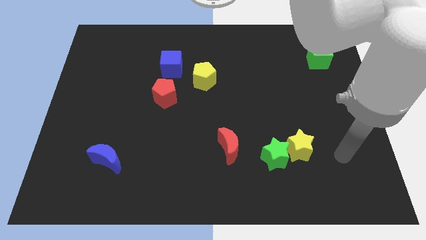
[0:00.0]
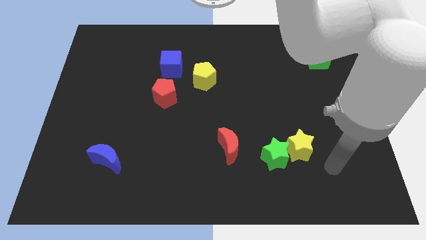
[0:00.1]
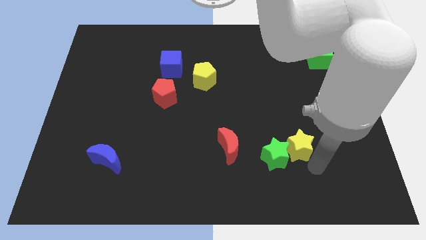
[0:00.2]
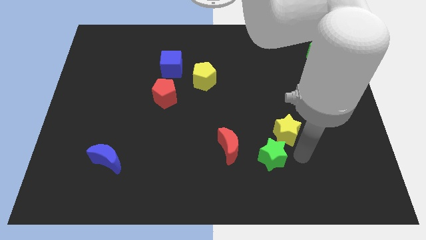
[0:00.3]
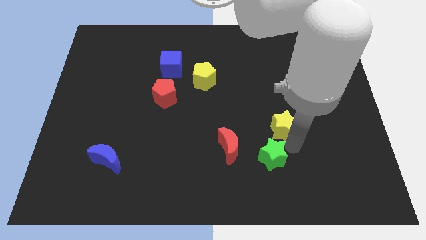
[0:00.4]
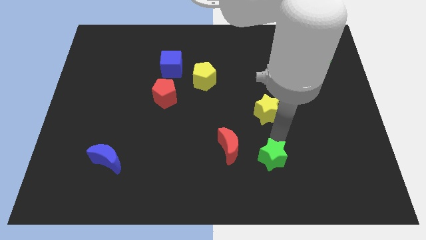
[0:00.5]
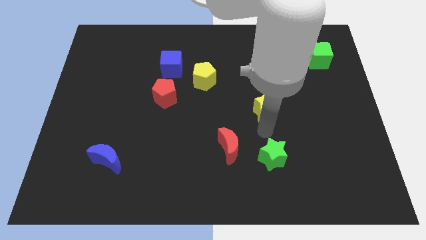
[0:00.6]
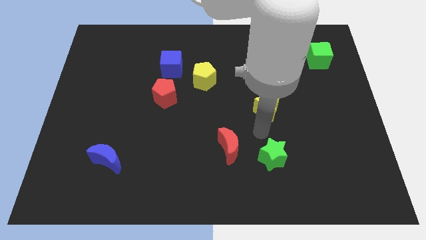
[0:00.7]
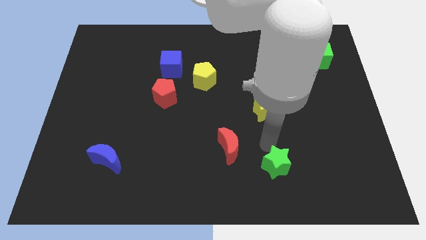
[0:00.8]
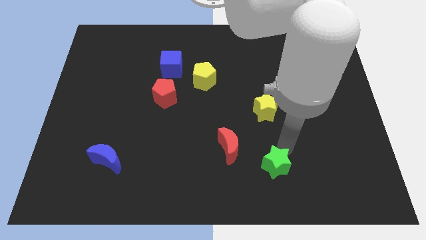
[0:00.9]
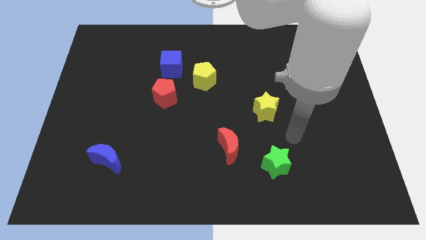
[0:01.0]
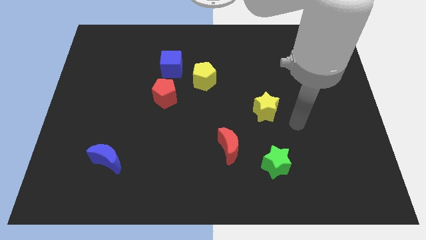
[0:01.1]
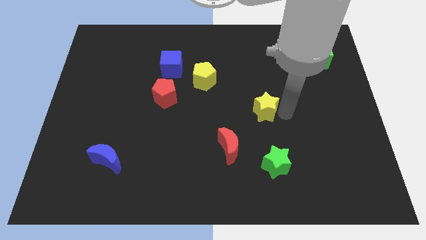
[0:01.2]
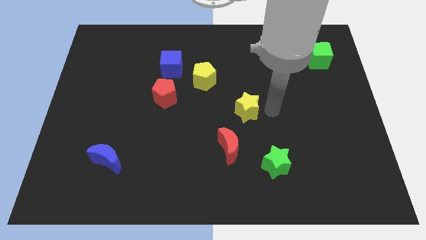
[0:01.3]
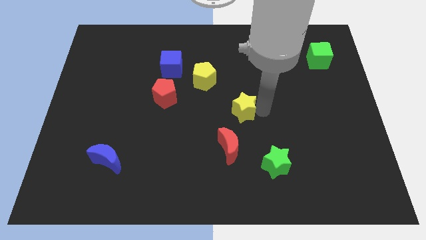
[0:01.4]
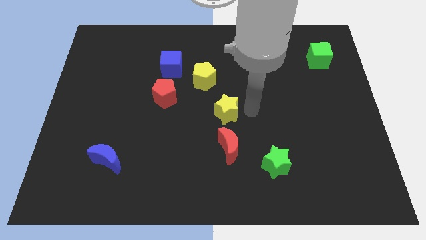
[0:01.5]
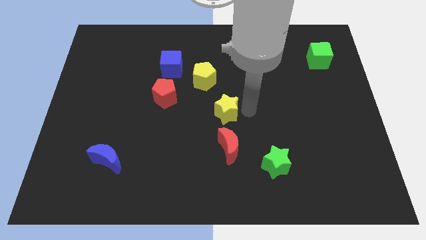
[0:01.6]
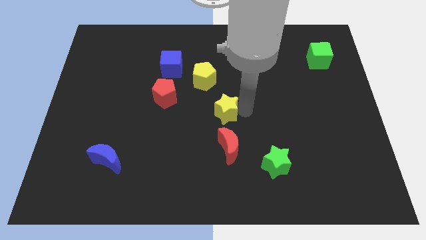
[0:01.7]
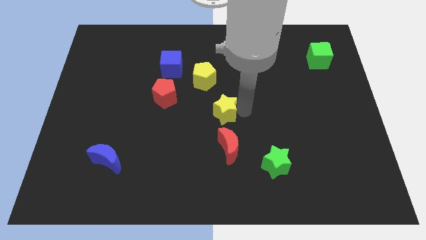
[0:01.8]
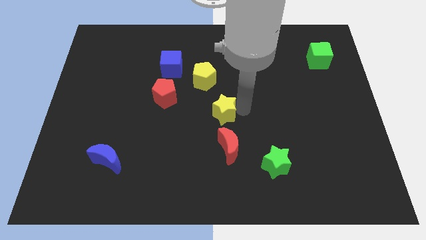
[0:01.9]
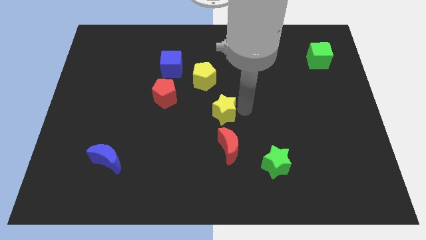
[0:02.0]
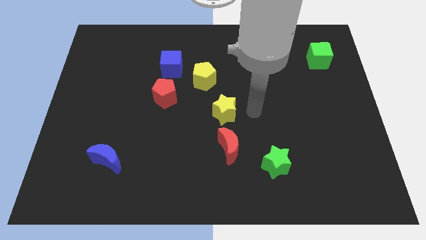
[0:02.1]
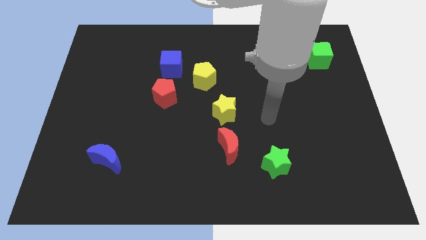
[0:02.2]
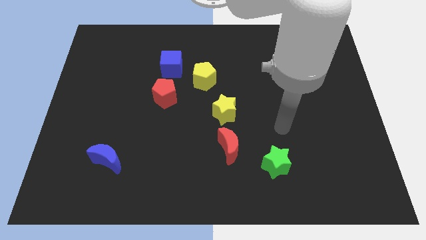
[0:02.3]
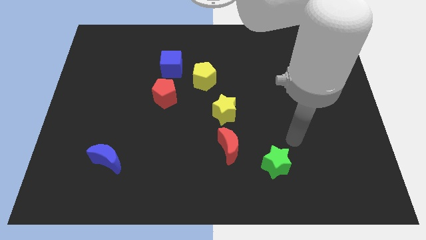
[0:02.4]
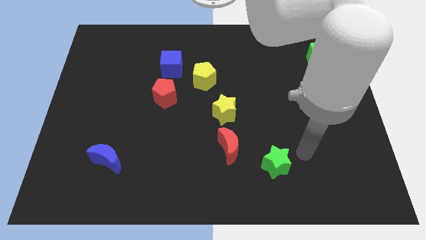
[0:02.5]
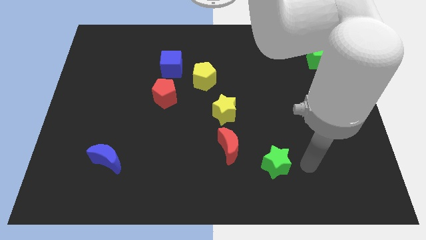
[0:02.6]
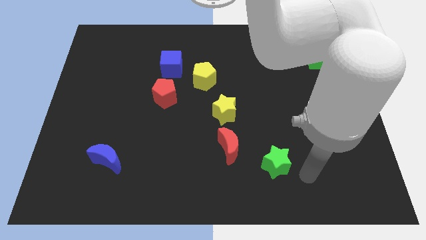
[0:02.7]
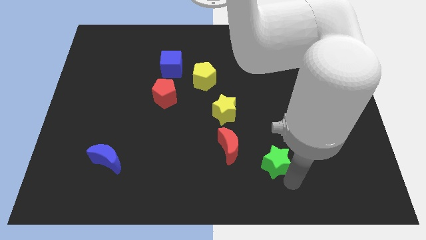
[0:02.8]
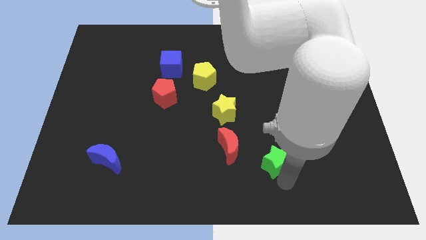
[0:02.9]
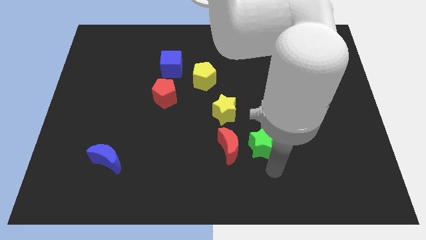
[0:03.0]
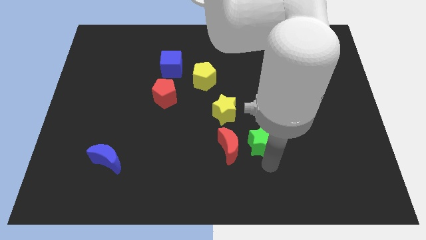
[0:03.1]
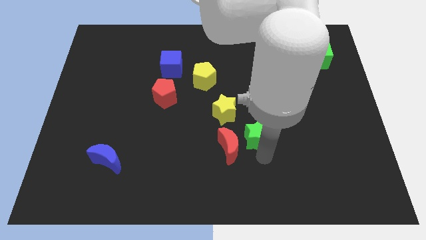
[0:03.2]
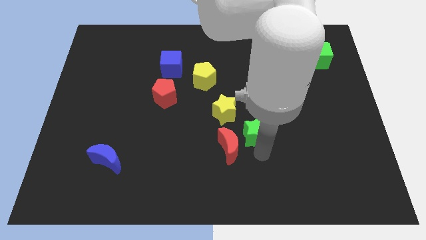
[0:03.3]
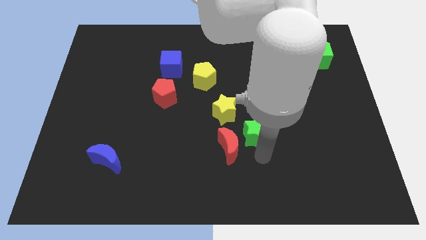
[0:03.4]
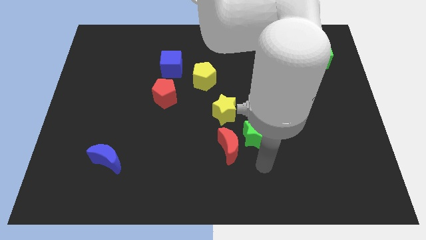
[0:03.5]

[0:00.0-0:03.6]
push the green star to the right of the red moon

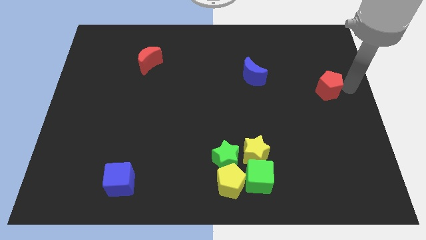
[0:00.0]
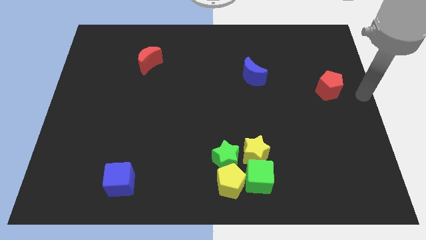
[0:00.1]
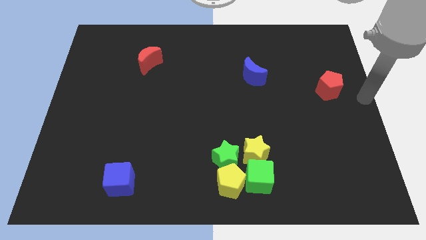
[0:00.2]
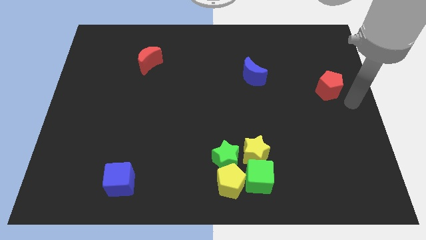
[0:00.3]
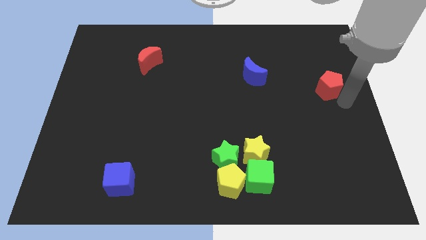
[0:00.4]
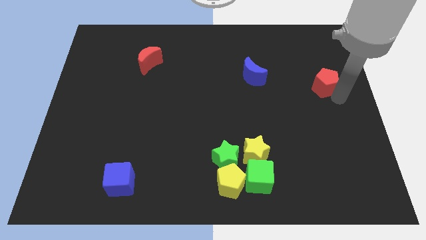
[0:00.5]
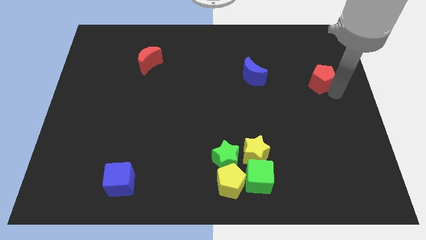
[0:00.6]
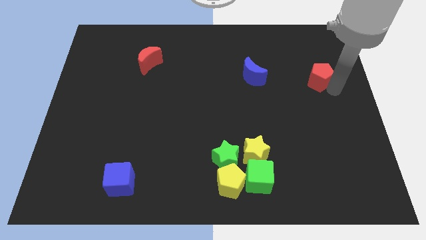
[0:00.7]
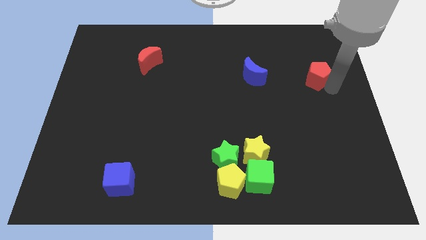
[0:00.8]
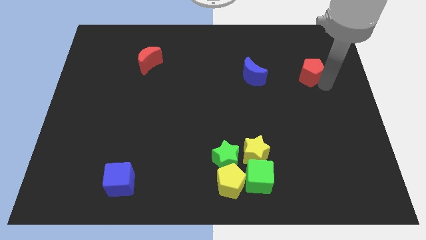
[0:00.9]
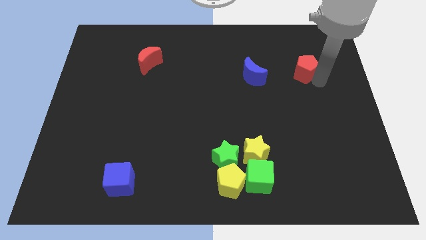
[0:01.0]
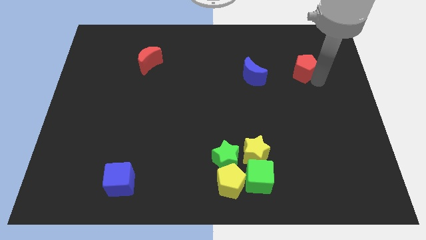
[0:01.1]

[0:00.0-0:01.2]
move red pentagon up to the right of blue moon

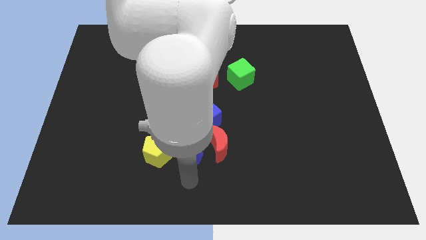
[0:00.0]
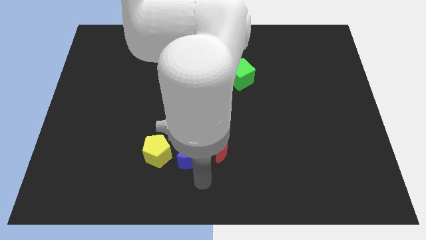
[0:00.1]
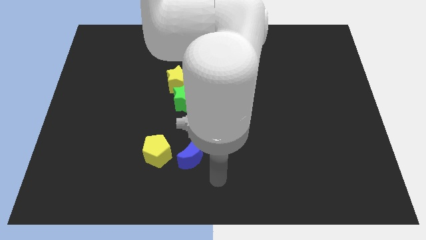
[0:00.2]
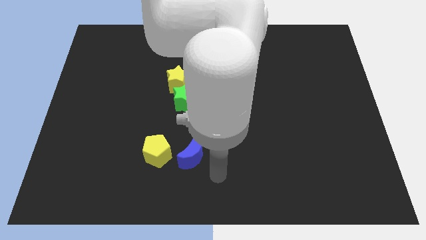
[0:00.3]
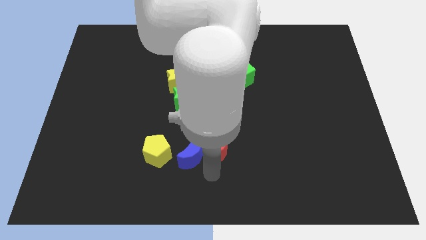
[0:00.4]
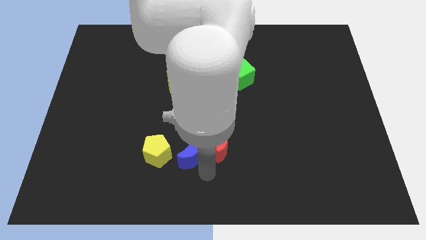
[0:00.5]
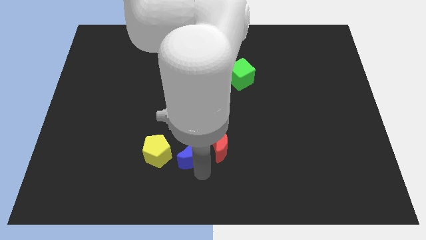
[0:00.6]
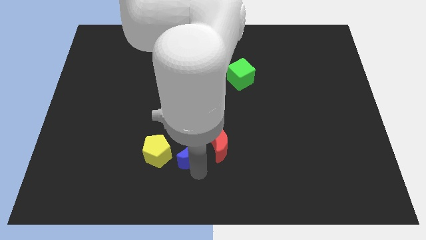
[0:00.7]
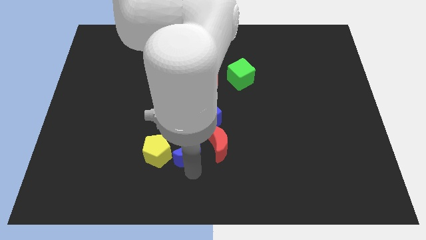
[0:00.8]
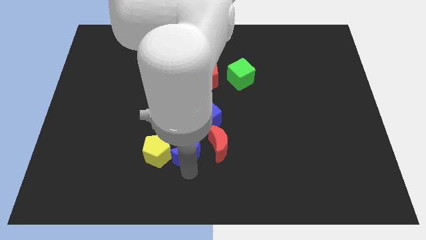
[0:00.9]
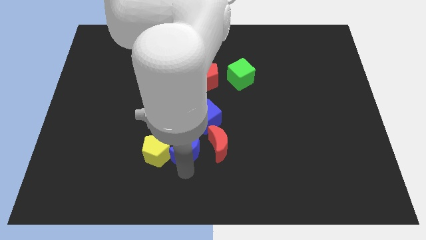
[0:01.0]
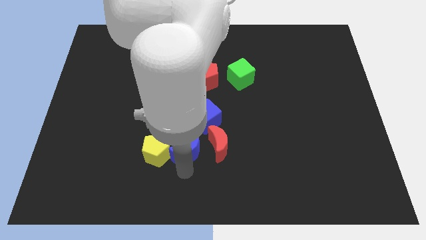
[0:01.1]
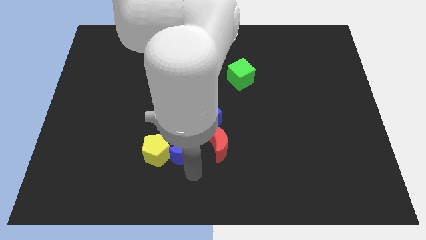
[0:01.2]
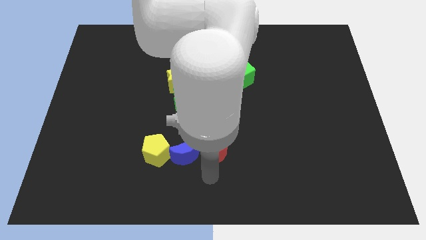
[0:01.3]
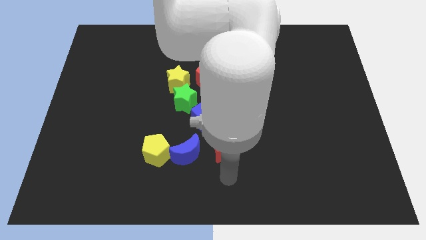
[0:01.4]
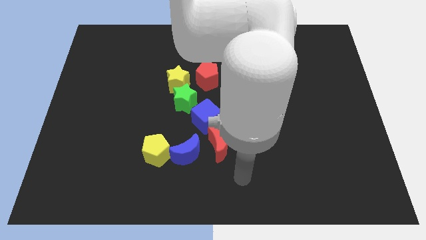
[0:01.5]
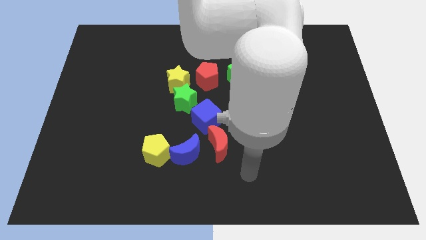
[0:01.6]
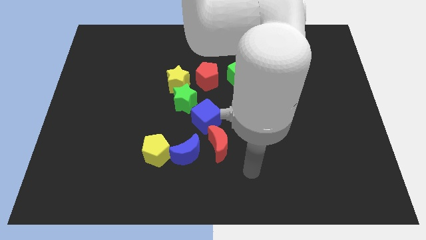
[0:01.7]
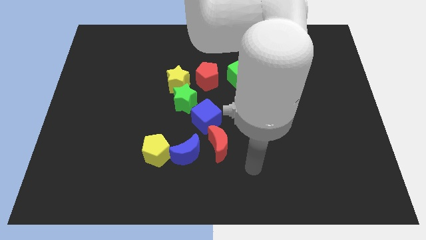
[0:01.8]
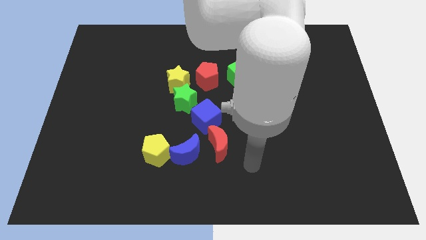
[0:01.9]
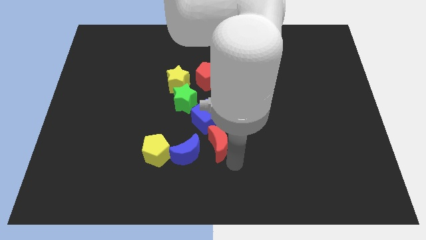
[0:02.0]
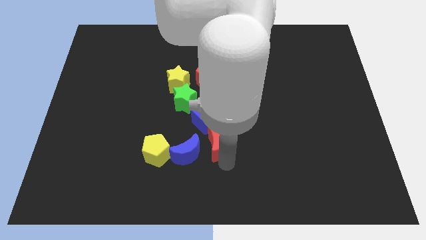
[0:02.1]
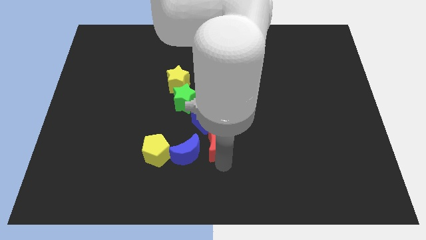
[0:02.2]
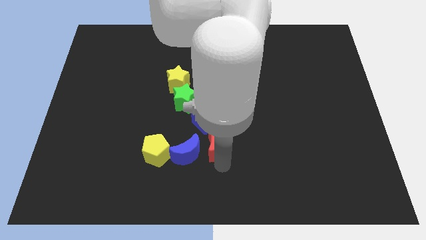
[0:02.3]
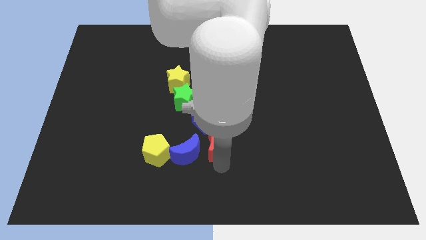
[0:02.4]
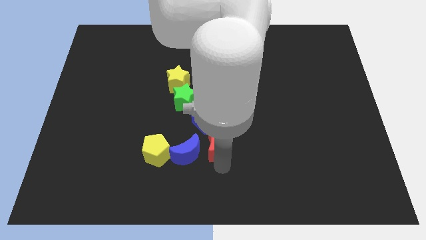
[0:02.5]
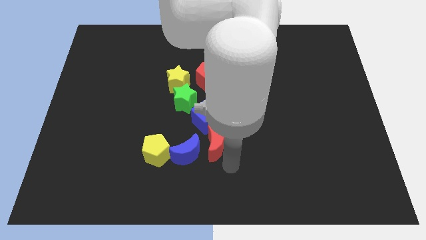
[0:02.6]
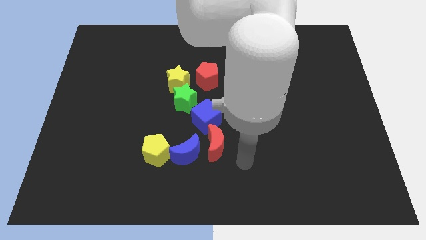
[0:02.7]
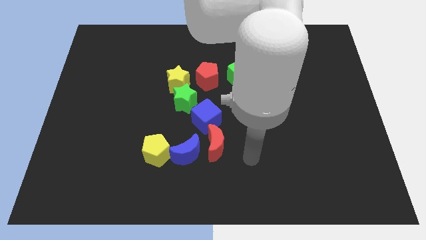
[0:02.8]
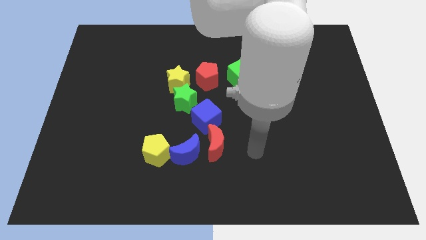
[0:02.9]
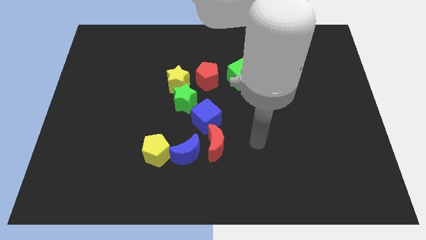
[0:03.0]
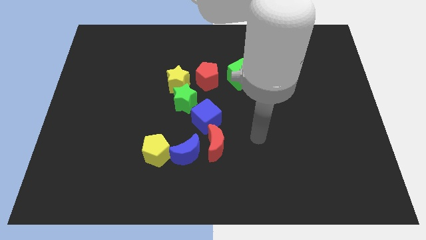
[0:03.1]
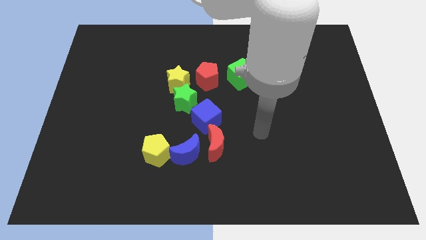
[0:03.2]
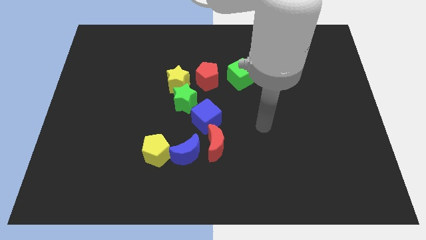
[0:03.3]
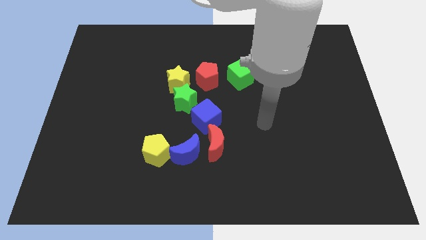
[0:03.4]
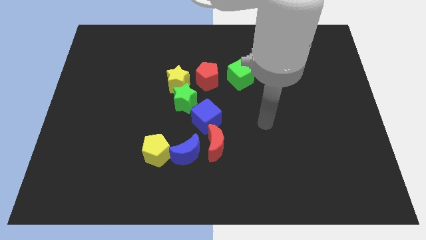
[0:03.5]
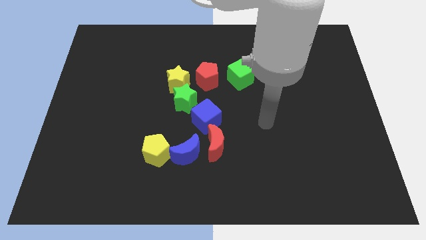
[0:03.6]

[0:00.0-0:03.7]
move the blue moon to the right of the yellow pentagon

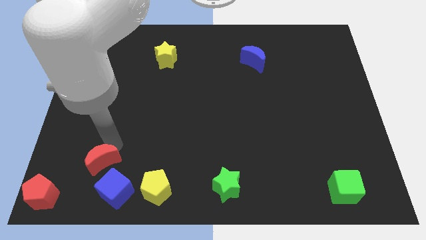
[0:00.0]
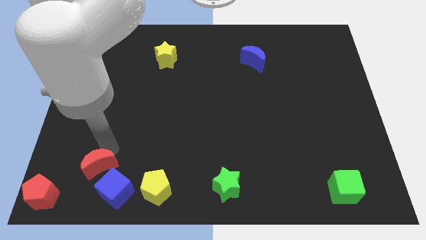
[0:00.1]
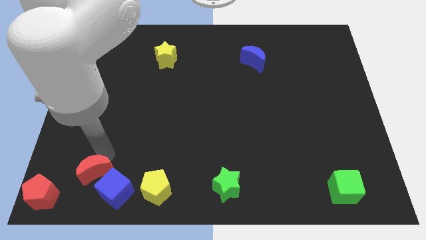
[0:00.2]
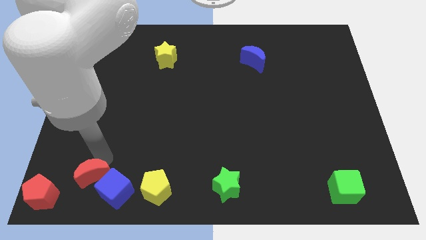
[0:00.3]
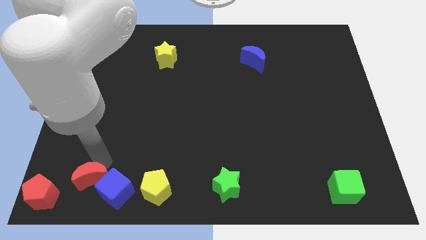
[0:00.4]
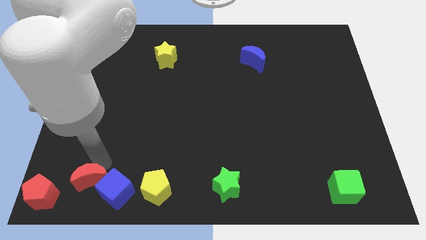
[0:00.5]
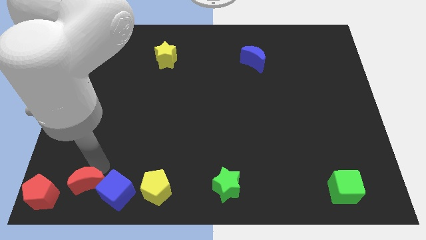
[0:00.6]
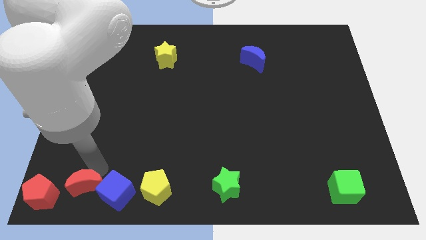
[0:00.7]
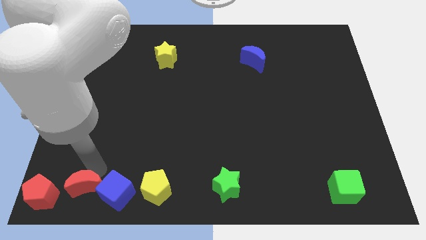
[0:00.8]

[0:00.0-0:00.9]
place red crescent beside blue cube
